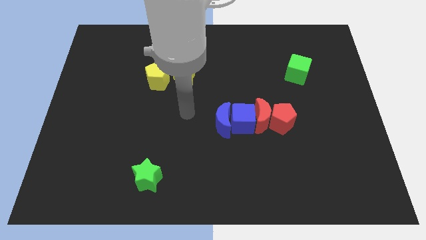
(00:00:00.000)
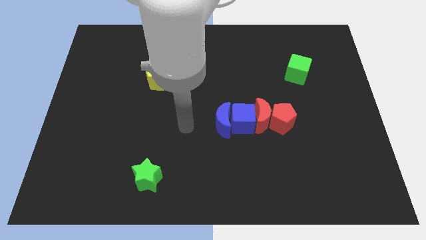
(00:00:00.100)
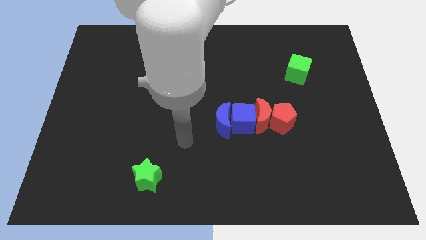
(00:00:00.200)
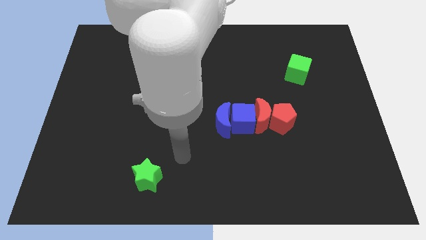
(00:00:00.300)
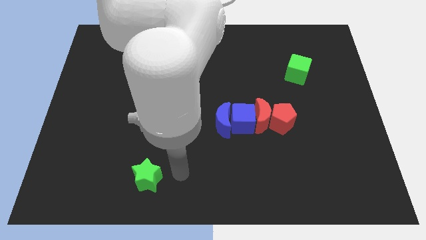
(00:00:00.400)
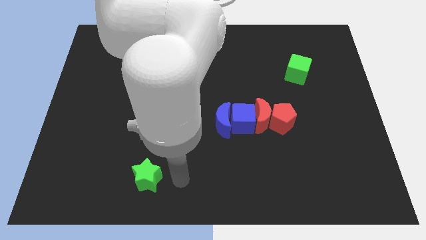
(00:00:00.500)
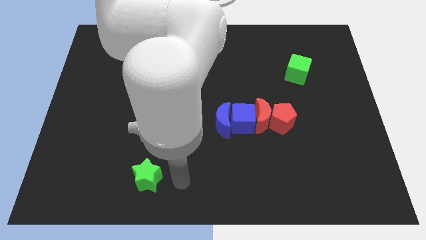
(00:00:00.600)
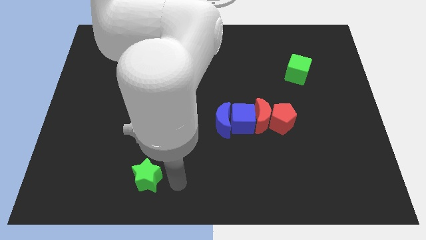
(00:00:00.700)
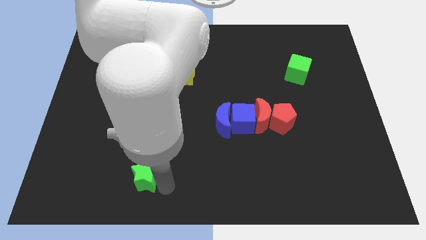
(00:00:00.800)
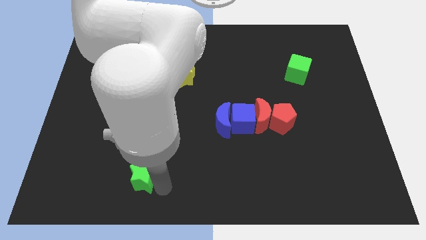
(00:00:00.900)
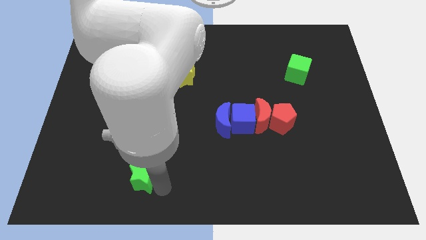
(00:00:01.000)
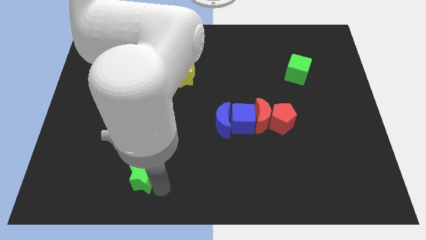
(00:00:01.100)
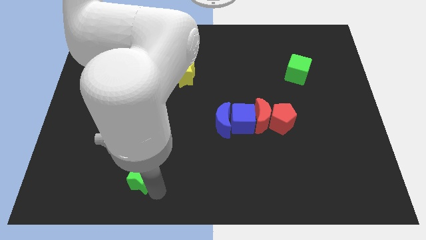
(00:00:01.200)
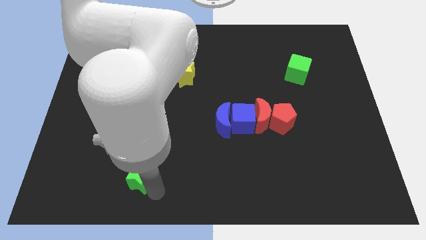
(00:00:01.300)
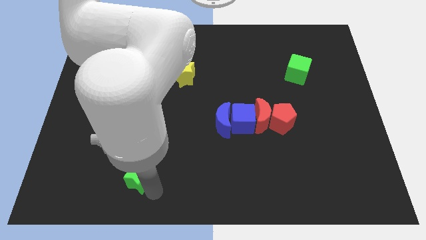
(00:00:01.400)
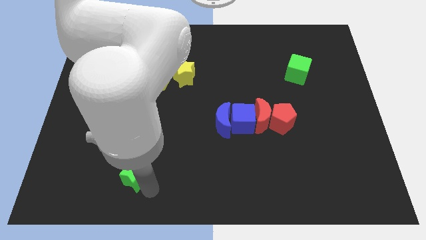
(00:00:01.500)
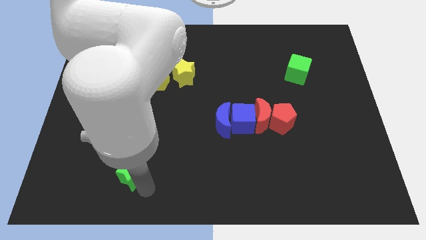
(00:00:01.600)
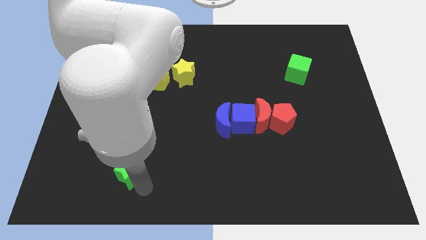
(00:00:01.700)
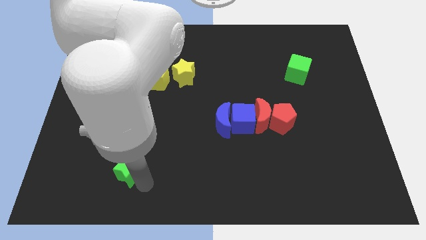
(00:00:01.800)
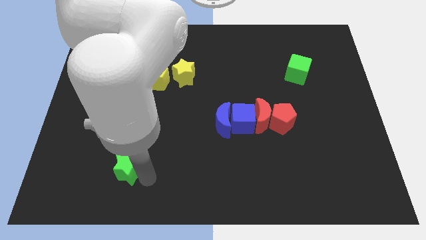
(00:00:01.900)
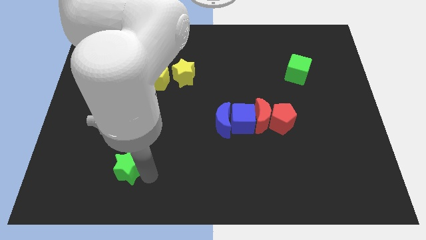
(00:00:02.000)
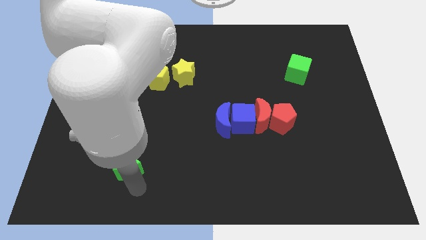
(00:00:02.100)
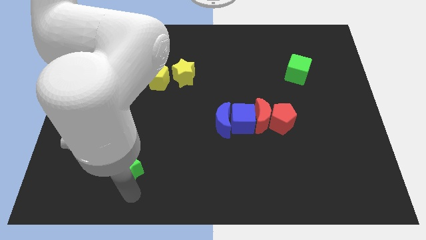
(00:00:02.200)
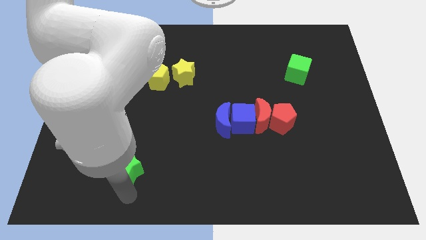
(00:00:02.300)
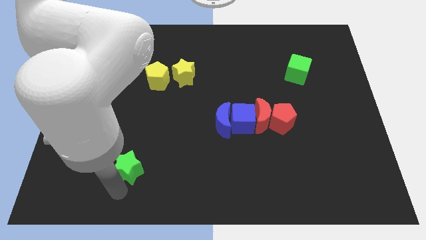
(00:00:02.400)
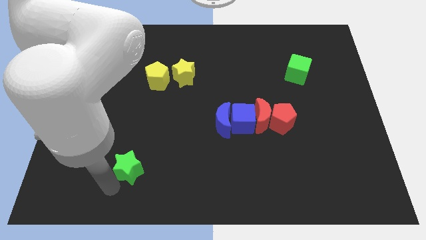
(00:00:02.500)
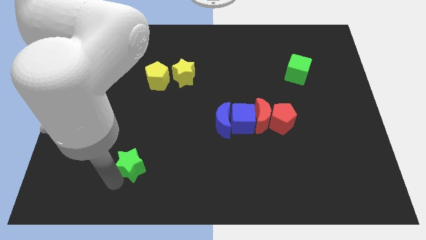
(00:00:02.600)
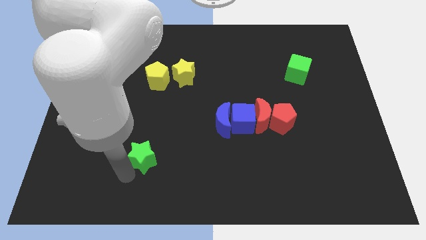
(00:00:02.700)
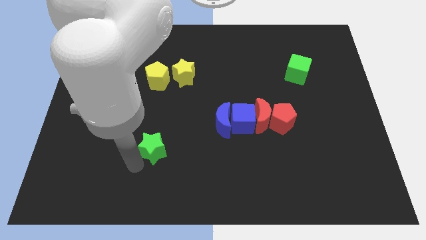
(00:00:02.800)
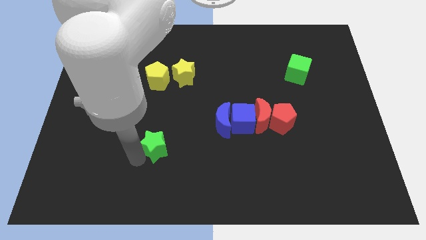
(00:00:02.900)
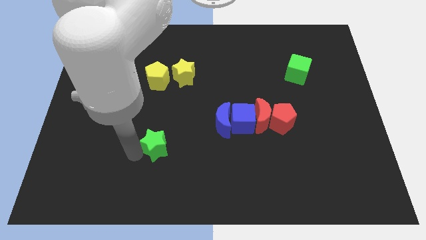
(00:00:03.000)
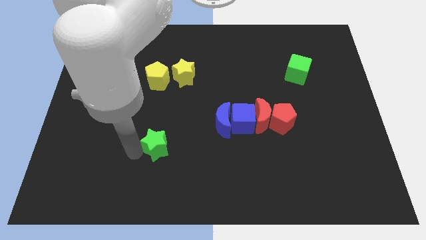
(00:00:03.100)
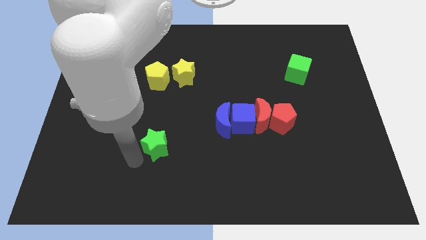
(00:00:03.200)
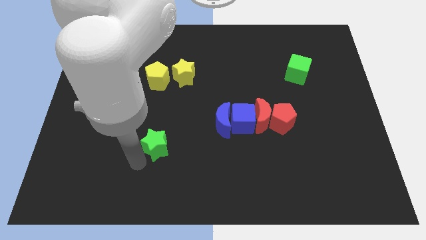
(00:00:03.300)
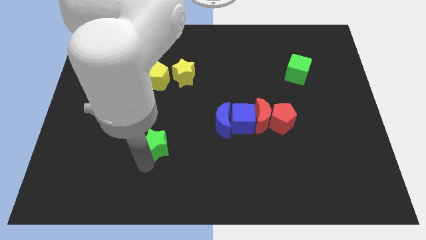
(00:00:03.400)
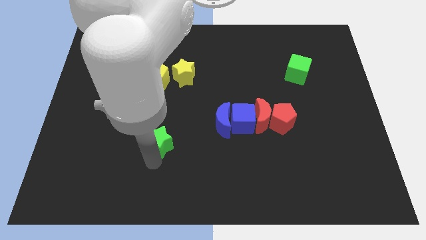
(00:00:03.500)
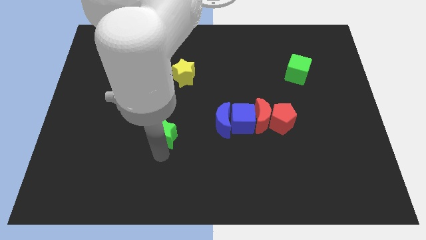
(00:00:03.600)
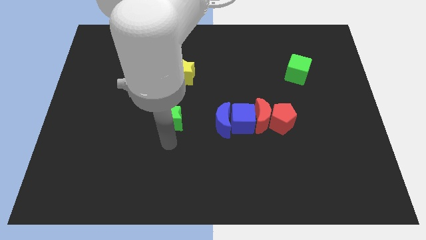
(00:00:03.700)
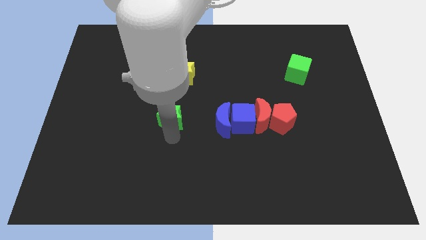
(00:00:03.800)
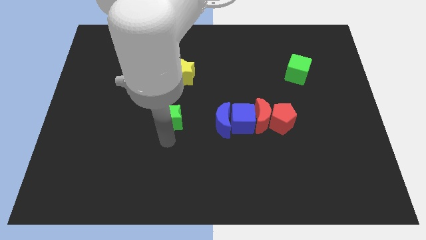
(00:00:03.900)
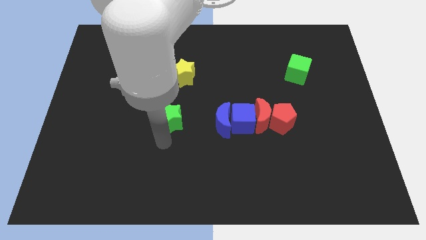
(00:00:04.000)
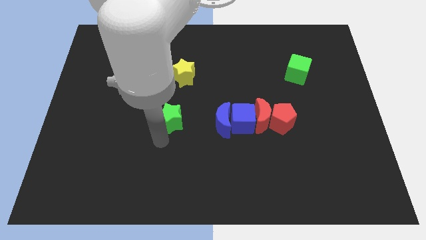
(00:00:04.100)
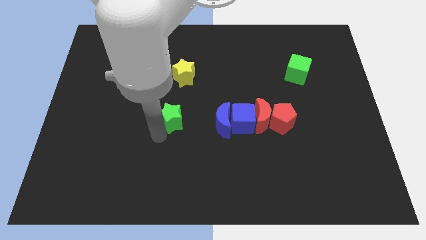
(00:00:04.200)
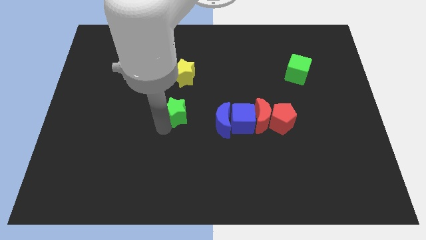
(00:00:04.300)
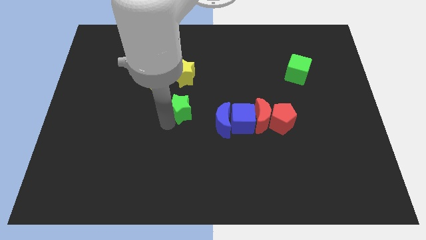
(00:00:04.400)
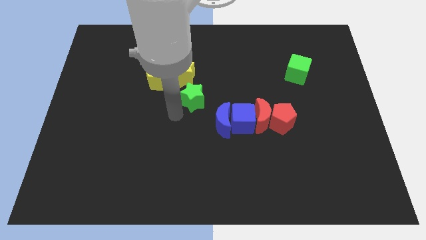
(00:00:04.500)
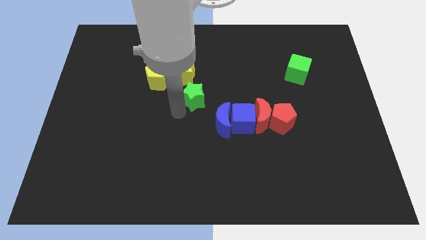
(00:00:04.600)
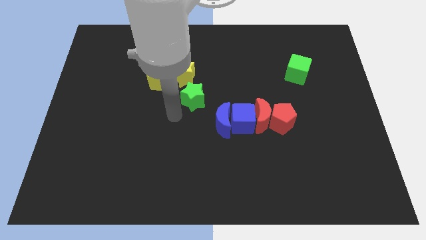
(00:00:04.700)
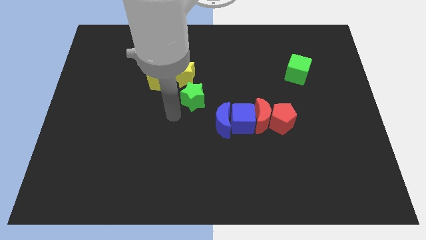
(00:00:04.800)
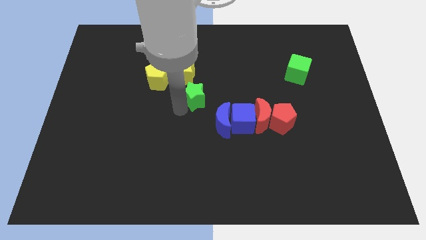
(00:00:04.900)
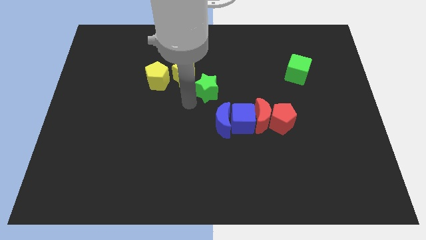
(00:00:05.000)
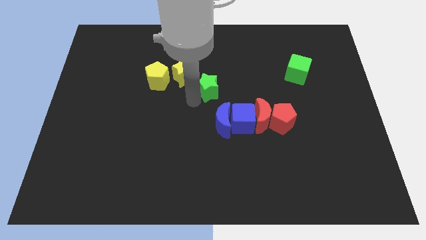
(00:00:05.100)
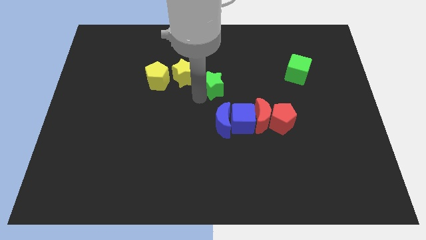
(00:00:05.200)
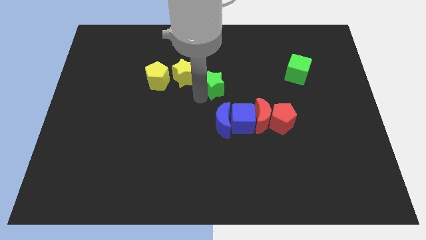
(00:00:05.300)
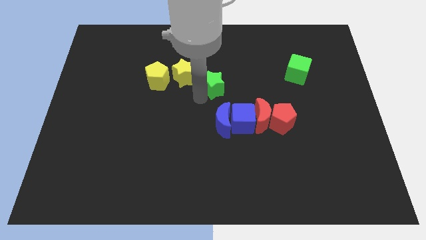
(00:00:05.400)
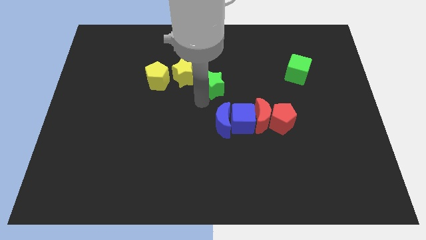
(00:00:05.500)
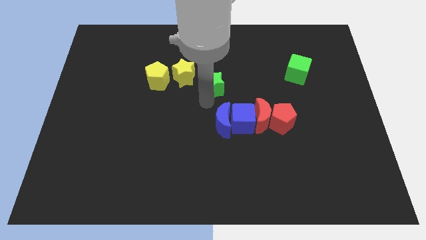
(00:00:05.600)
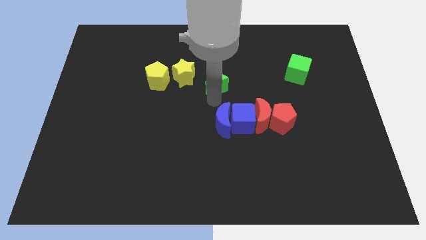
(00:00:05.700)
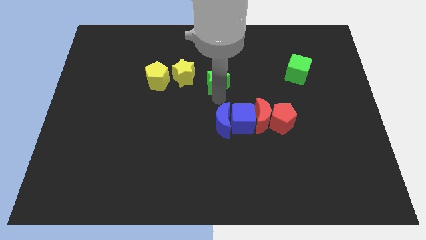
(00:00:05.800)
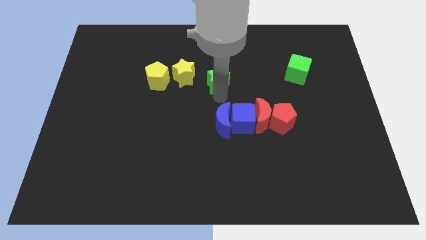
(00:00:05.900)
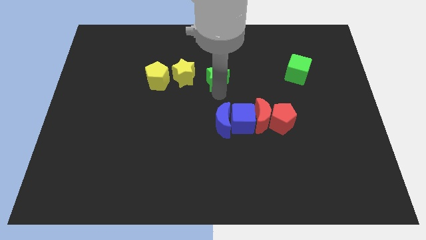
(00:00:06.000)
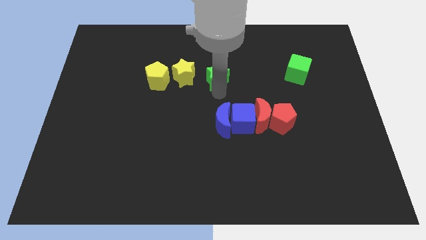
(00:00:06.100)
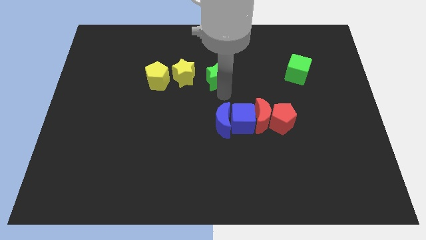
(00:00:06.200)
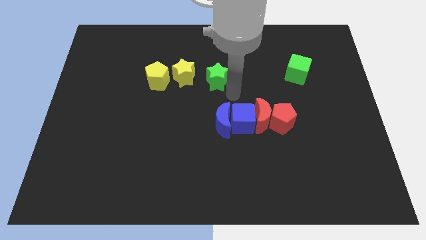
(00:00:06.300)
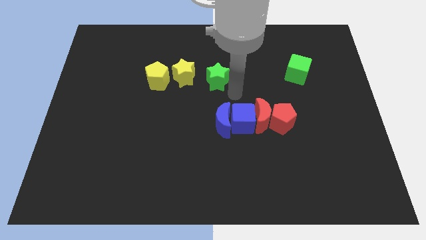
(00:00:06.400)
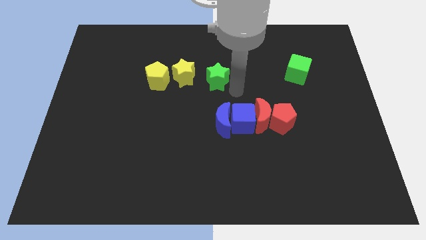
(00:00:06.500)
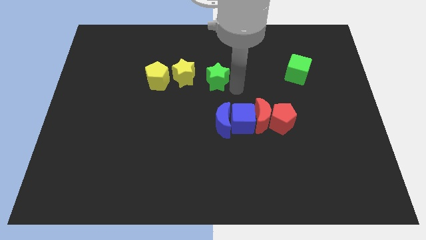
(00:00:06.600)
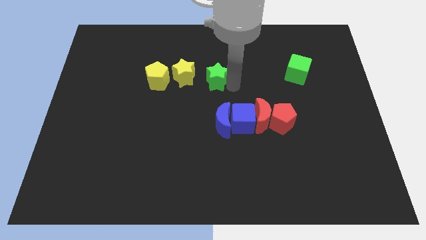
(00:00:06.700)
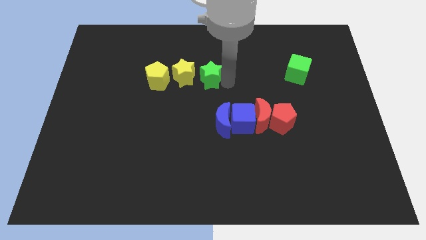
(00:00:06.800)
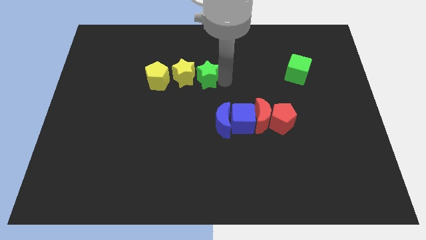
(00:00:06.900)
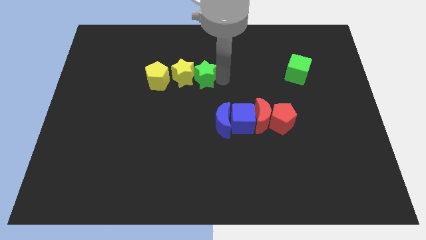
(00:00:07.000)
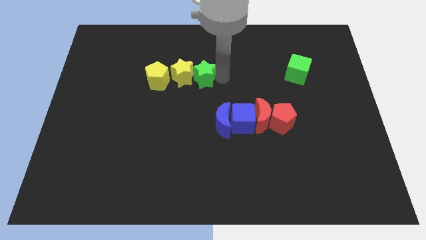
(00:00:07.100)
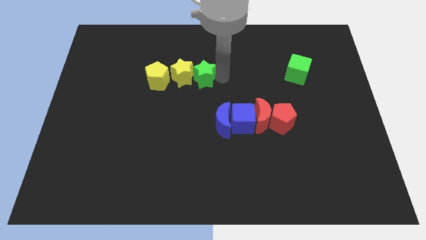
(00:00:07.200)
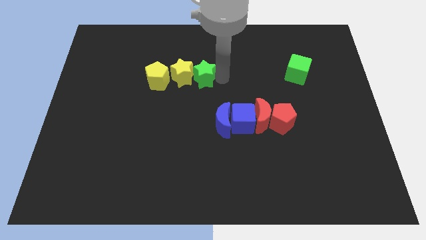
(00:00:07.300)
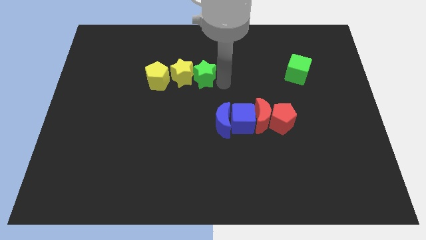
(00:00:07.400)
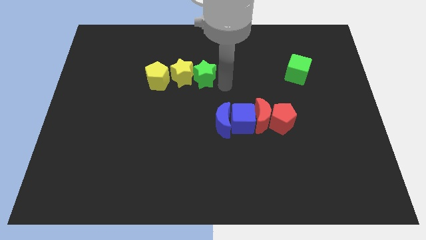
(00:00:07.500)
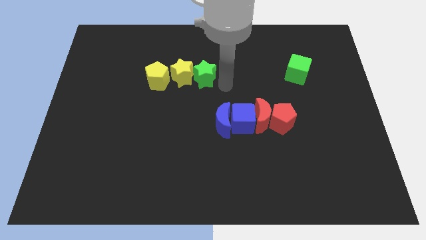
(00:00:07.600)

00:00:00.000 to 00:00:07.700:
push the green star into the yellow star

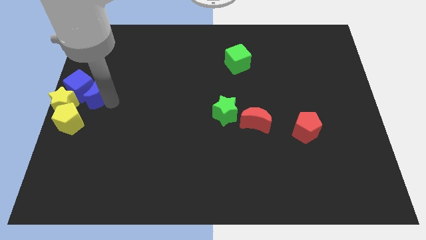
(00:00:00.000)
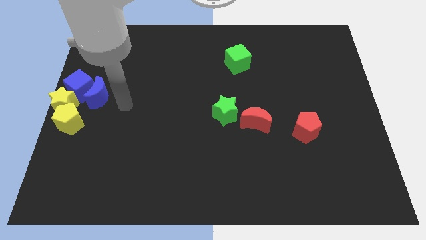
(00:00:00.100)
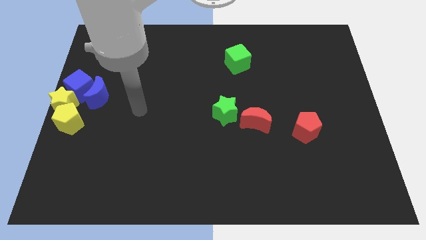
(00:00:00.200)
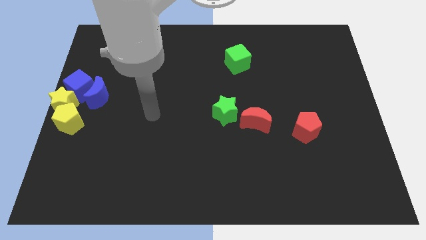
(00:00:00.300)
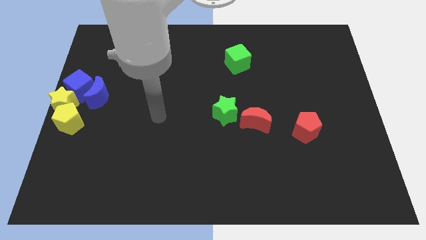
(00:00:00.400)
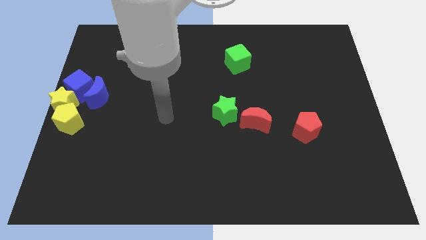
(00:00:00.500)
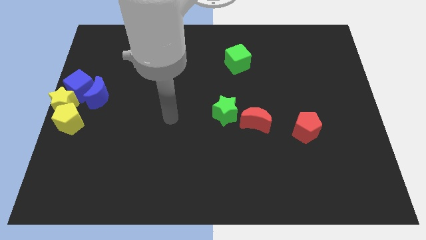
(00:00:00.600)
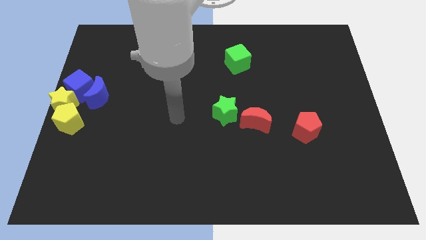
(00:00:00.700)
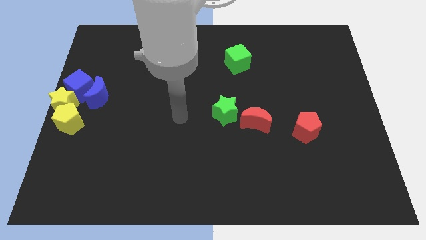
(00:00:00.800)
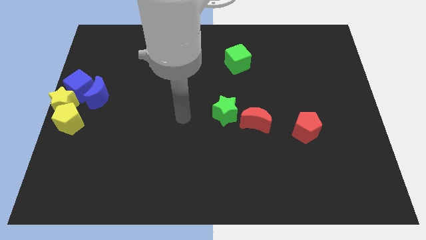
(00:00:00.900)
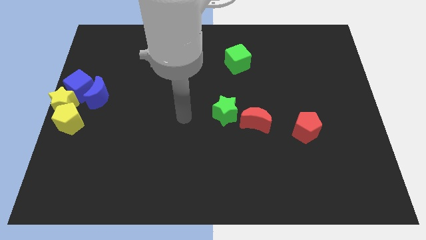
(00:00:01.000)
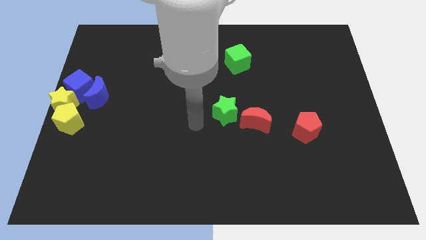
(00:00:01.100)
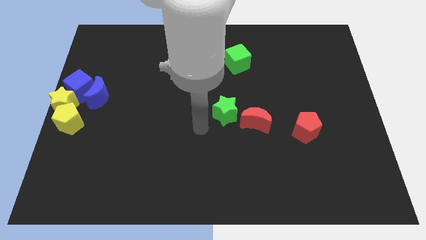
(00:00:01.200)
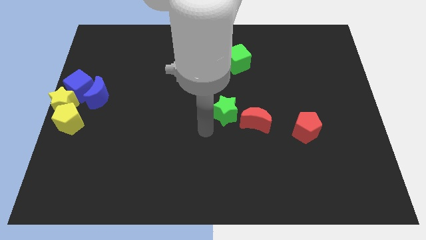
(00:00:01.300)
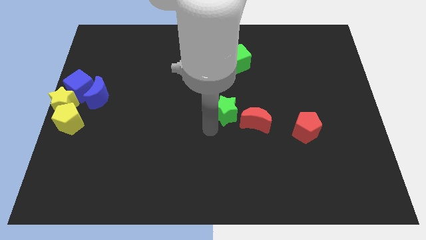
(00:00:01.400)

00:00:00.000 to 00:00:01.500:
move your arm away from the blue moon
